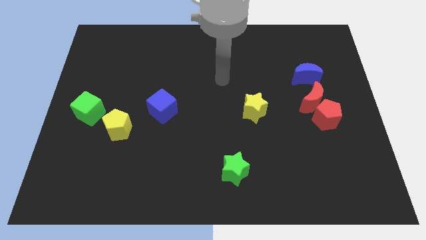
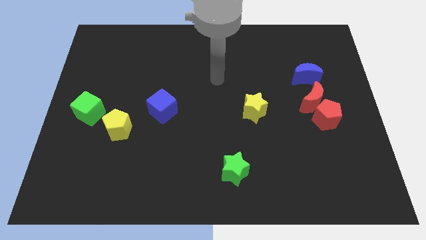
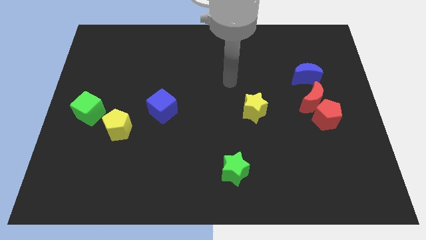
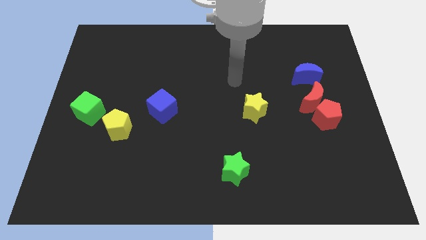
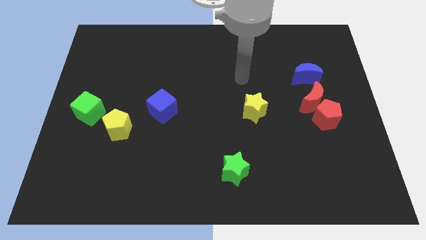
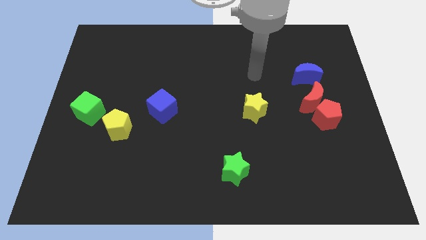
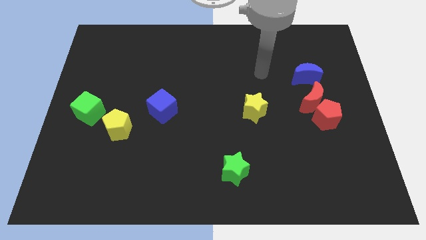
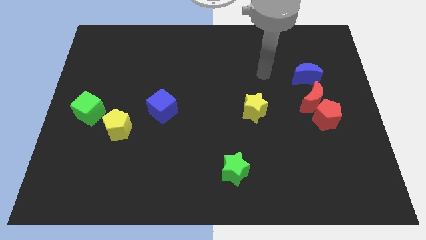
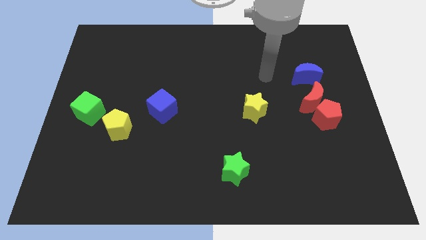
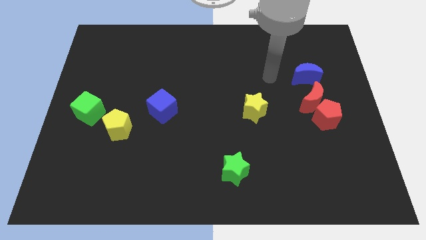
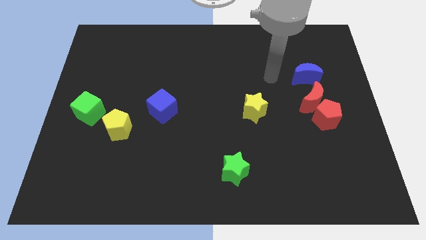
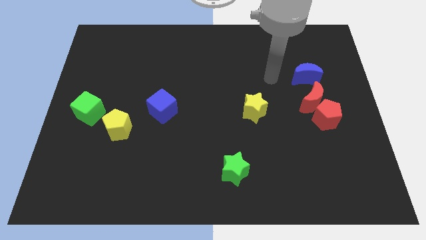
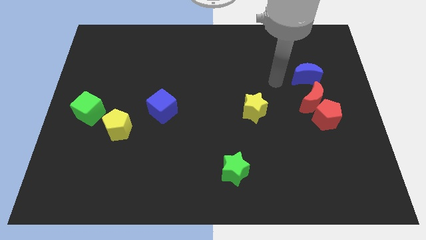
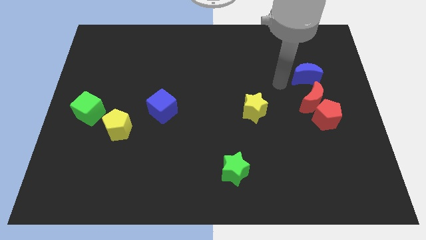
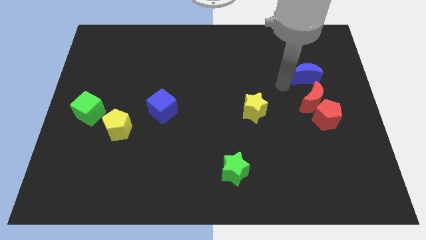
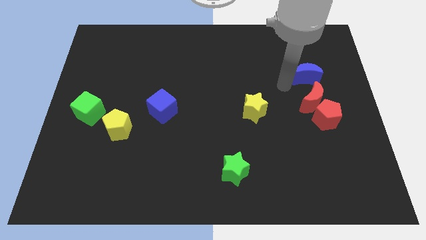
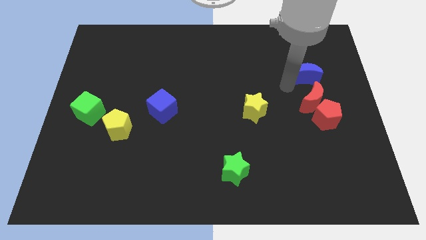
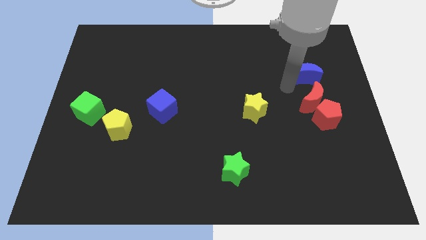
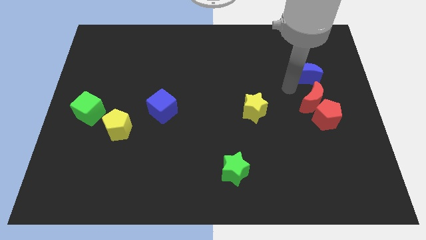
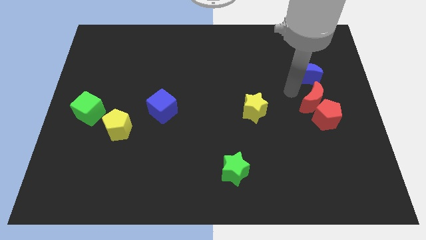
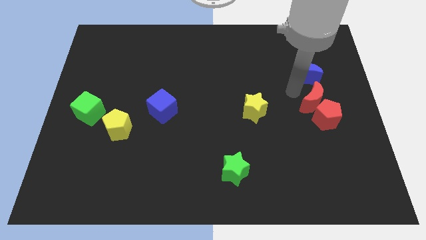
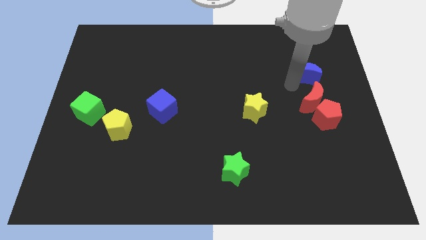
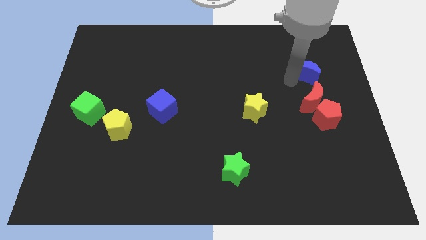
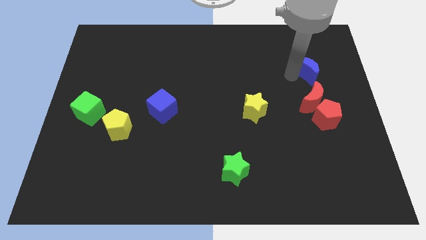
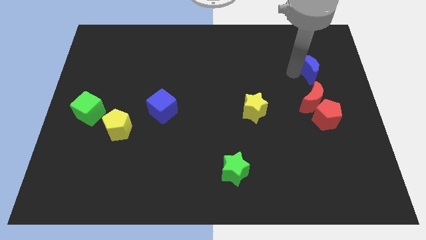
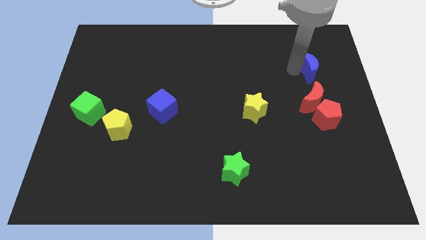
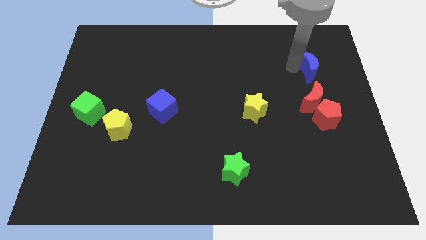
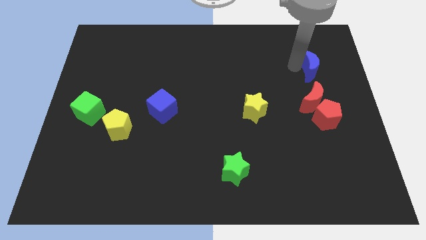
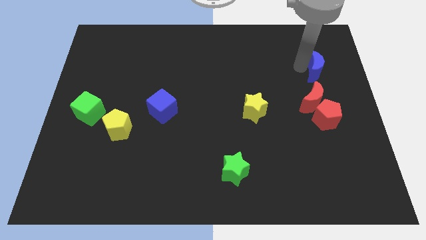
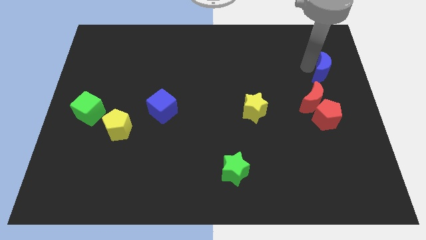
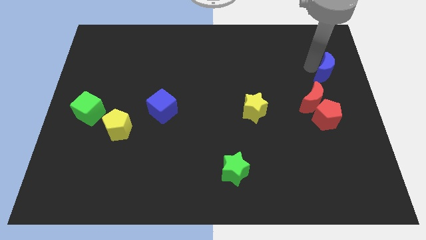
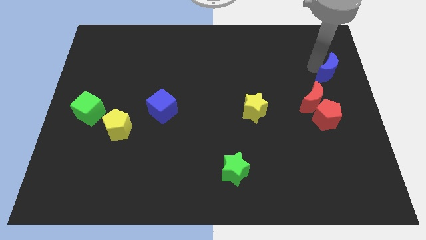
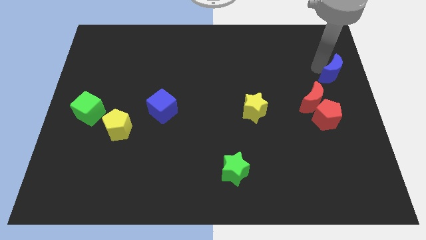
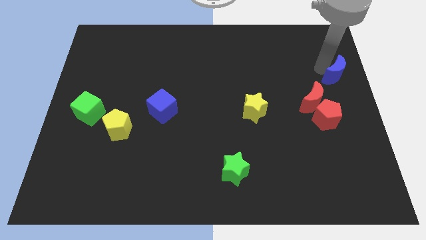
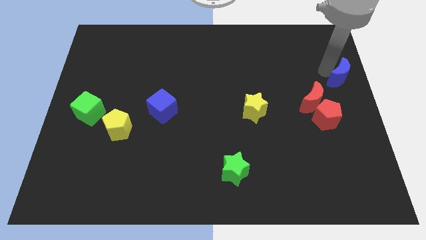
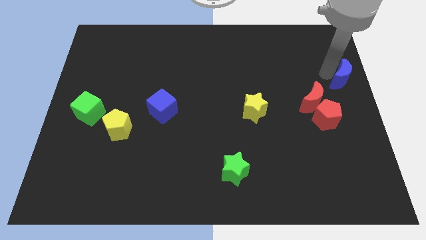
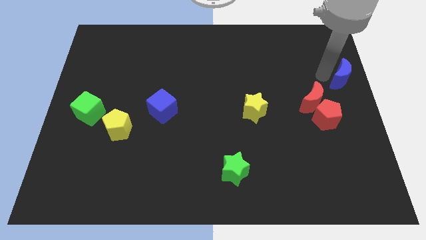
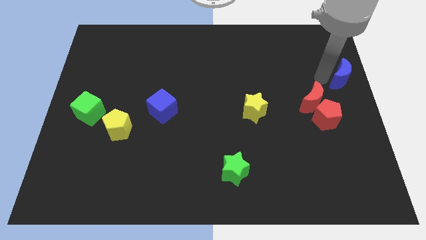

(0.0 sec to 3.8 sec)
push the blue crescent away from the red crescent

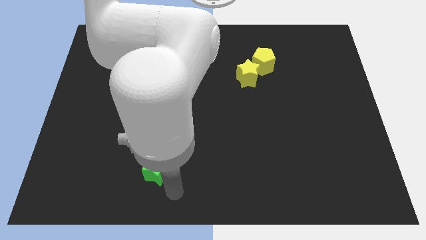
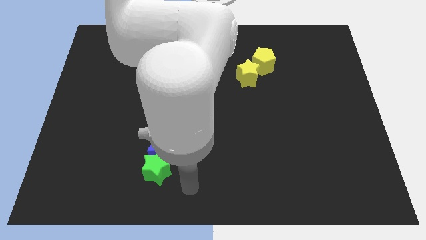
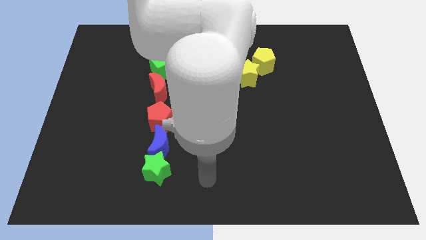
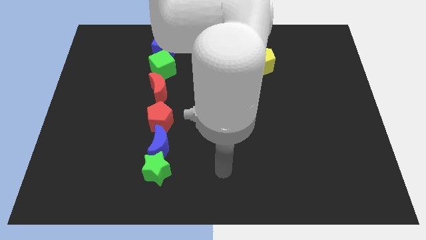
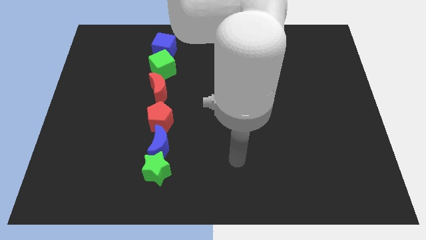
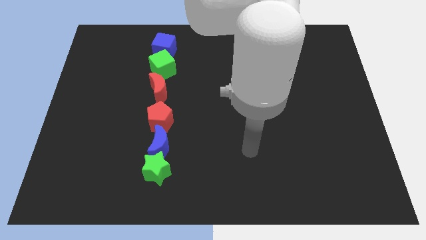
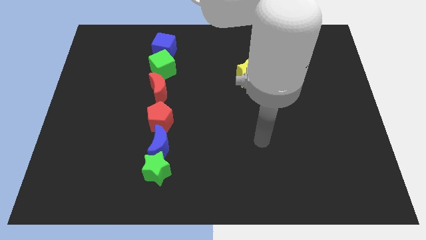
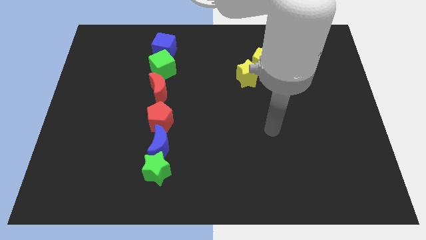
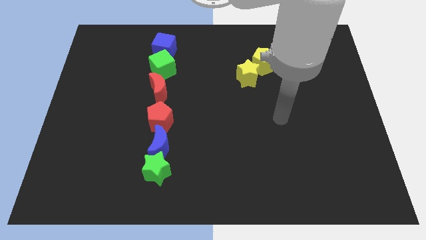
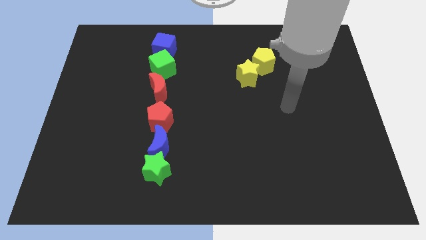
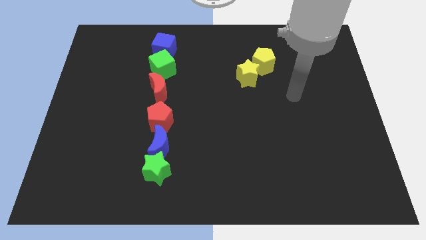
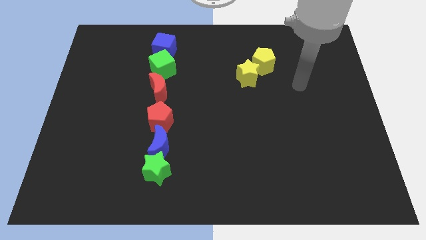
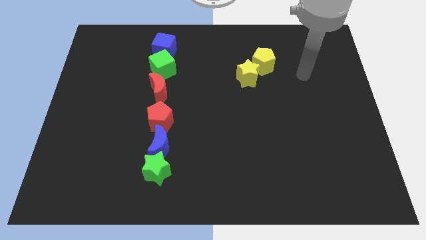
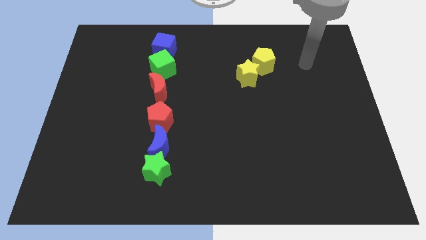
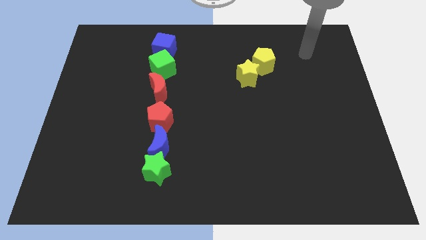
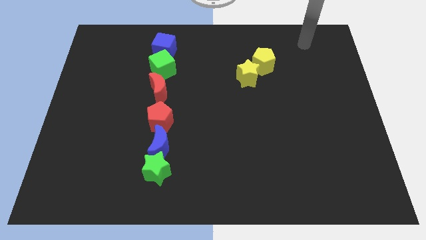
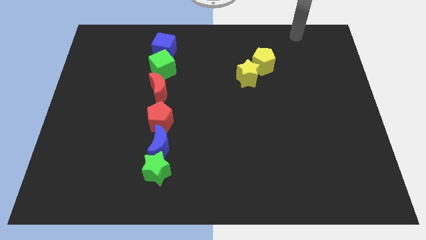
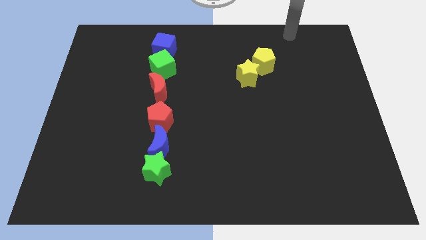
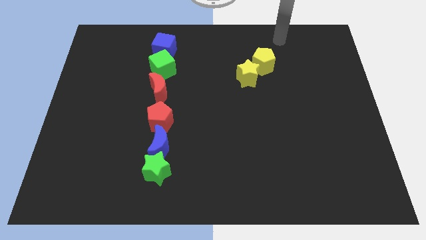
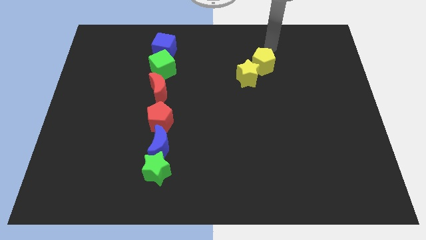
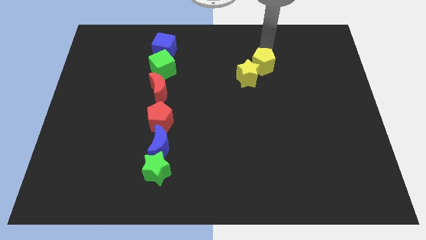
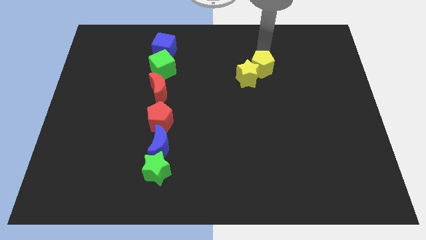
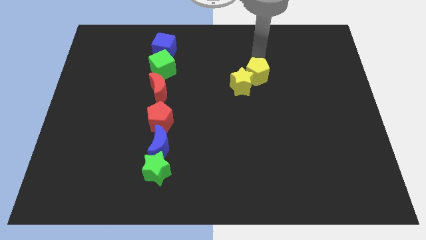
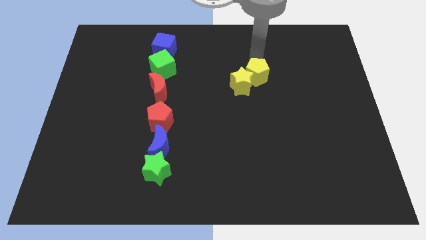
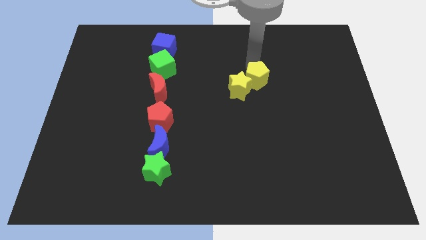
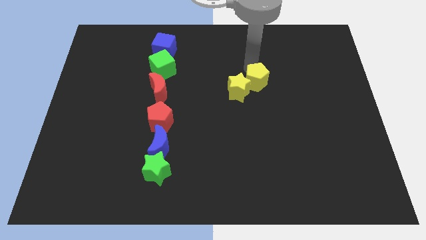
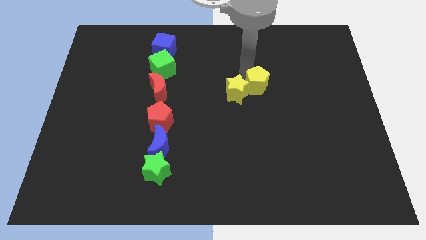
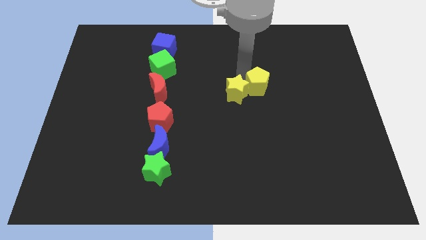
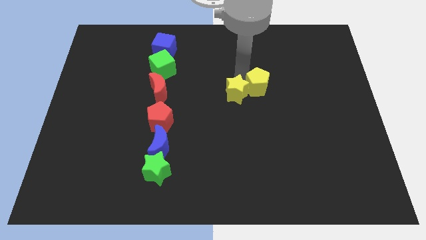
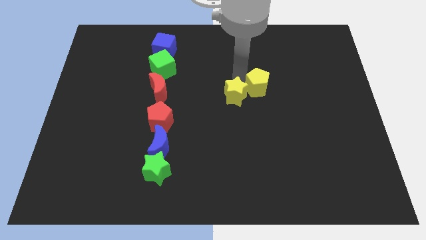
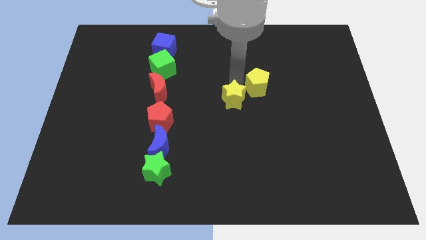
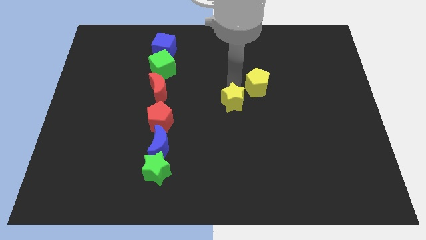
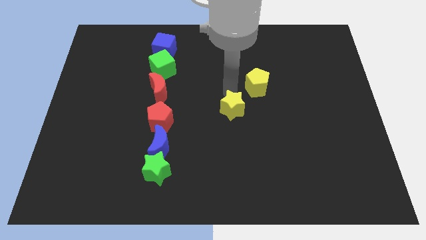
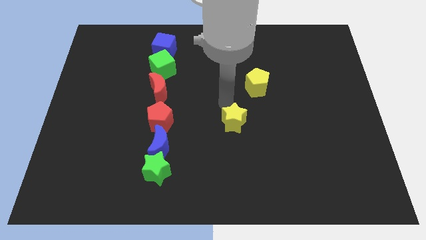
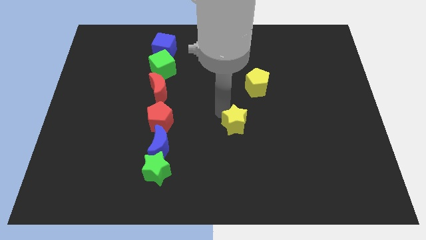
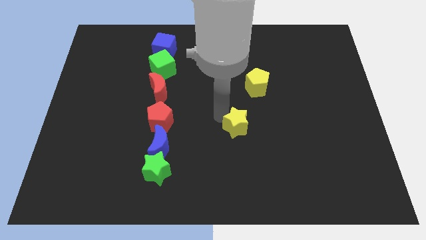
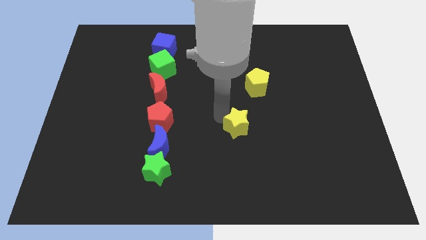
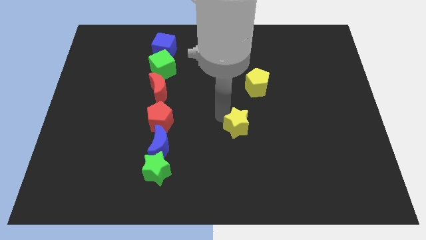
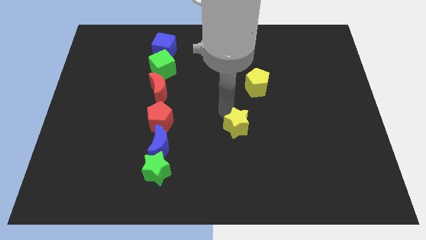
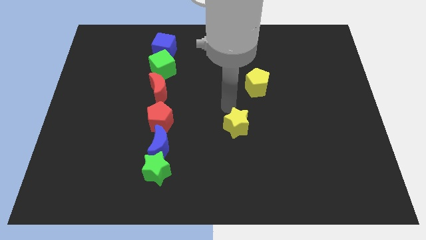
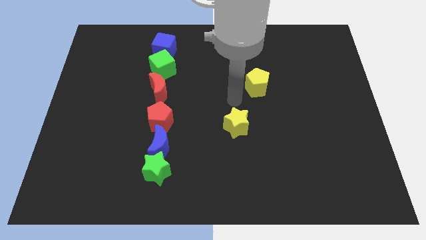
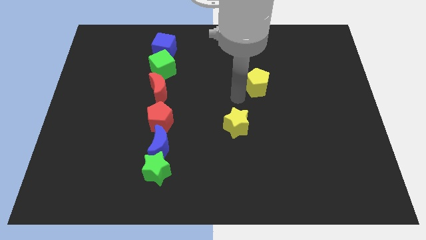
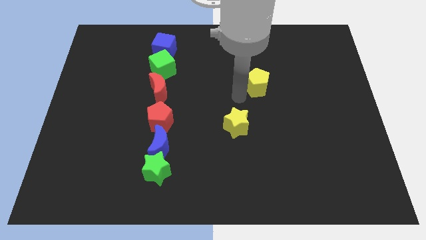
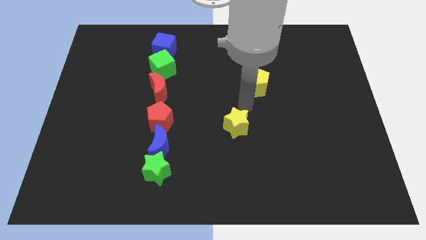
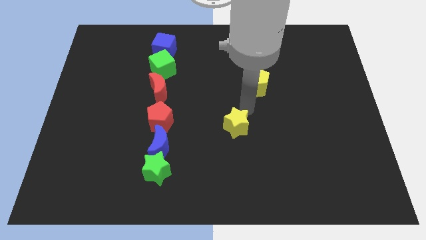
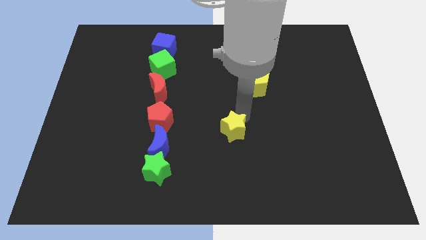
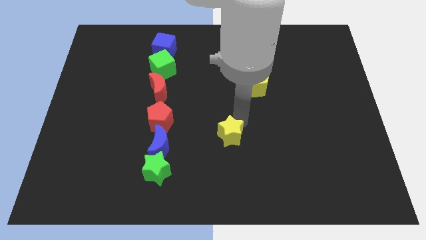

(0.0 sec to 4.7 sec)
separate the yellow star from the yellow pentagon

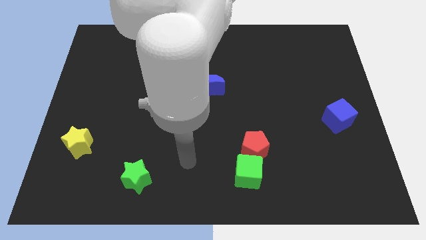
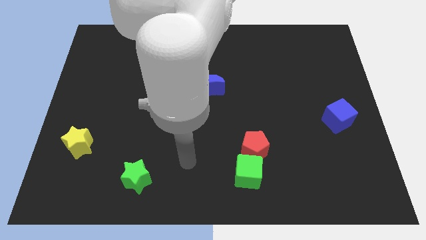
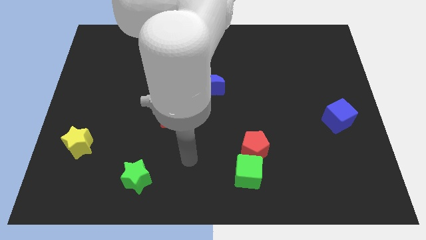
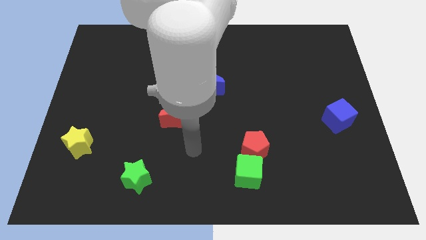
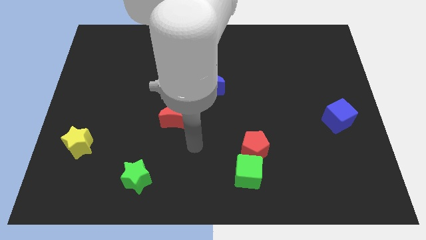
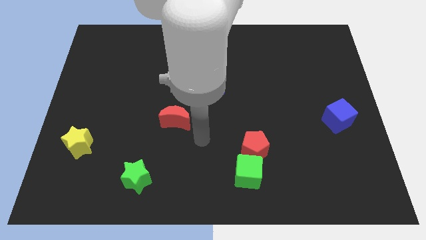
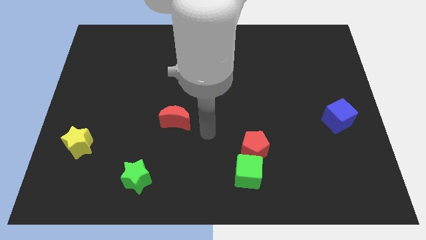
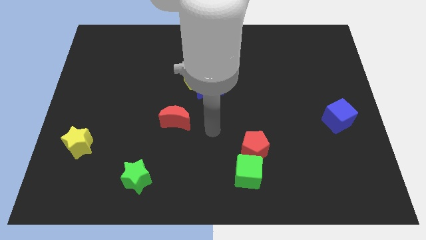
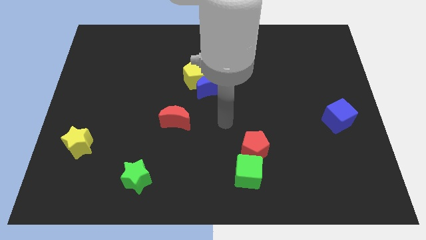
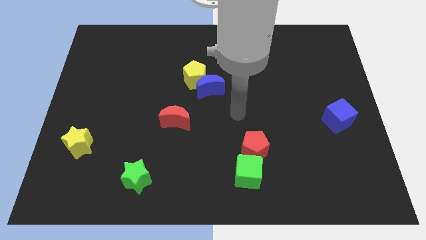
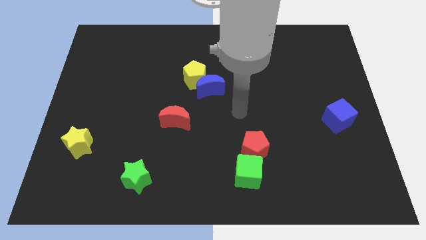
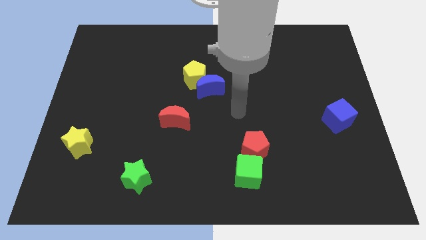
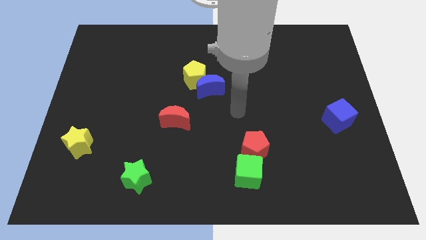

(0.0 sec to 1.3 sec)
move your arm in between the blue crescent and red pentagon
